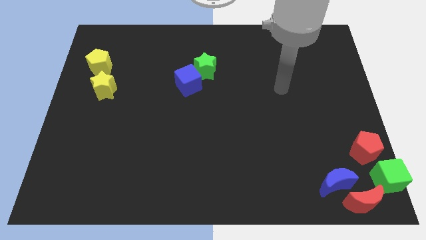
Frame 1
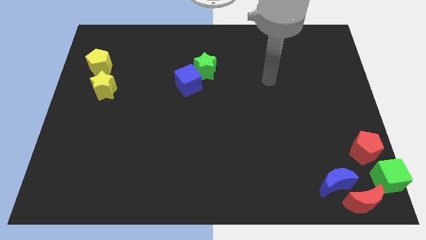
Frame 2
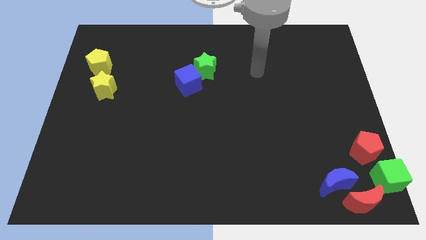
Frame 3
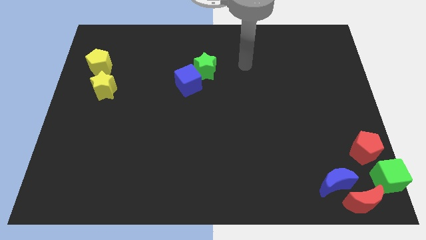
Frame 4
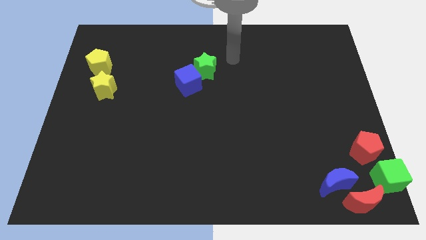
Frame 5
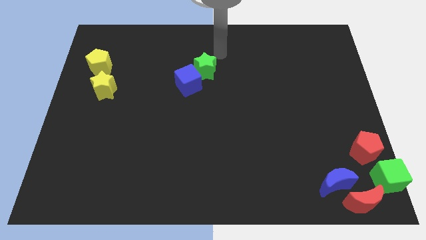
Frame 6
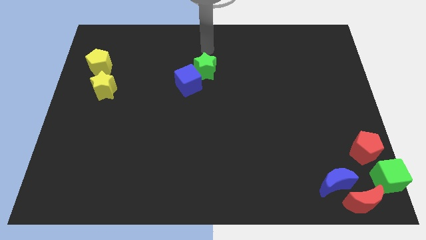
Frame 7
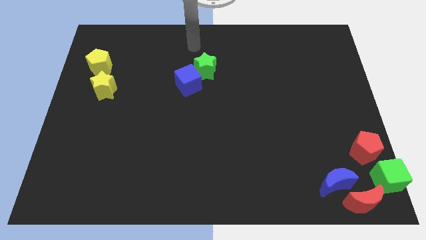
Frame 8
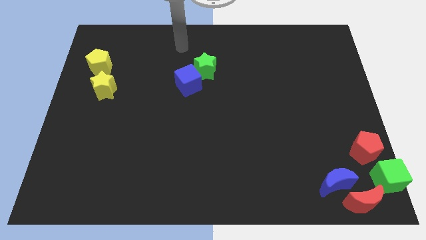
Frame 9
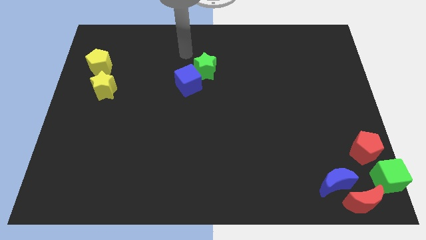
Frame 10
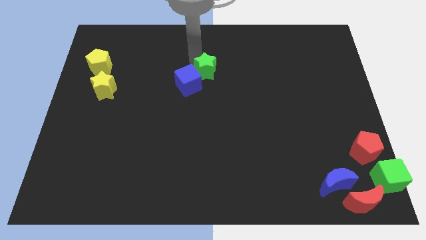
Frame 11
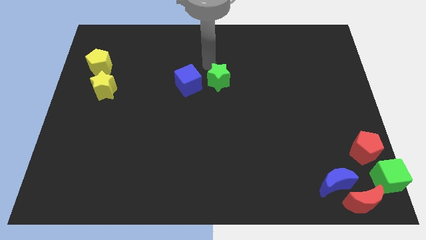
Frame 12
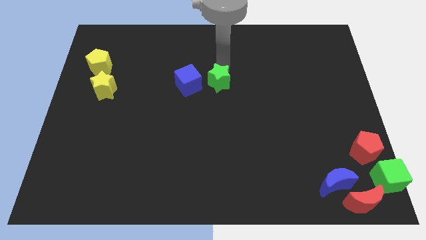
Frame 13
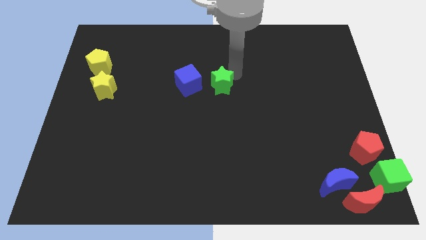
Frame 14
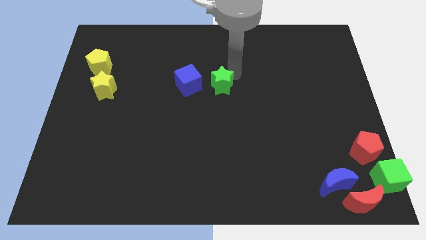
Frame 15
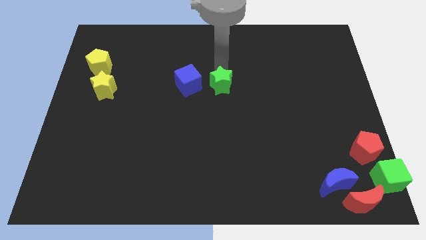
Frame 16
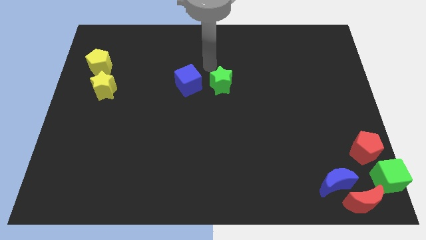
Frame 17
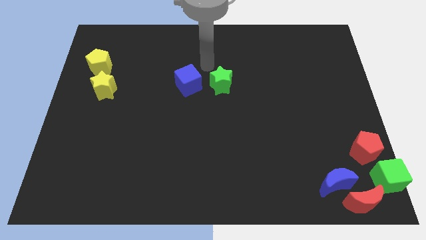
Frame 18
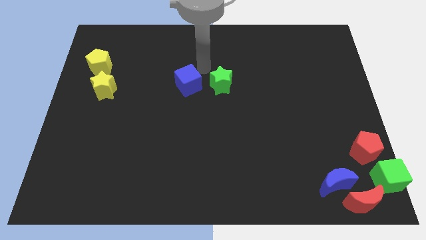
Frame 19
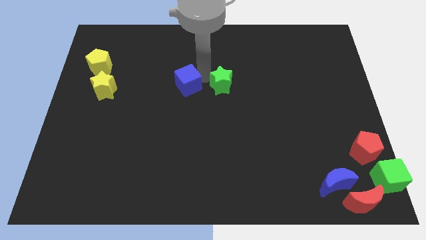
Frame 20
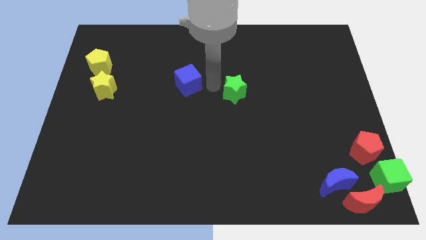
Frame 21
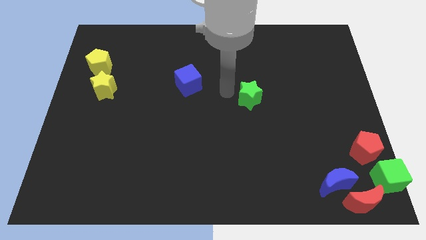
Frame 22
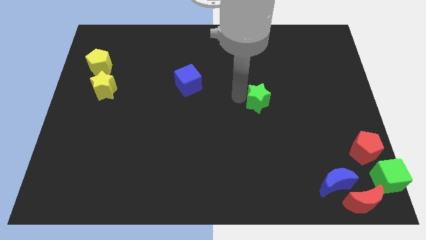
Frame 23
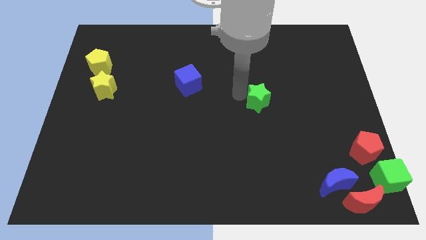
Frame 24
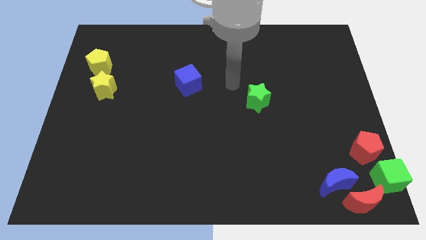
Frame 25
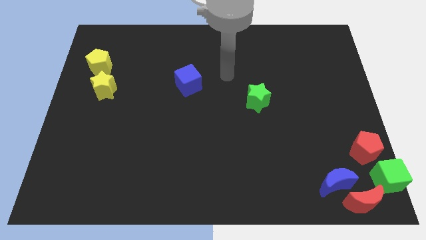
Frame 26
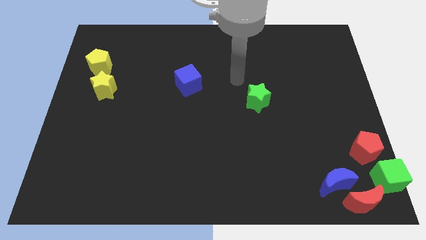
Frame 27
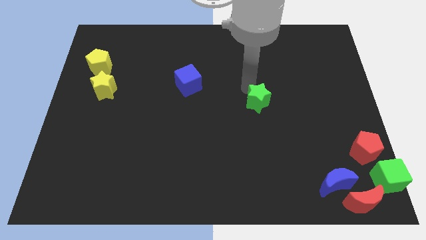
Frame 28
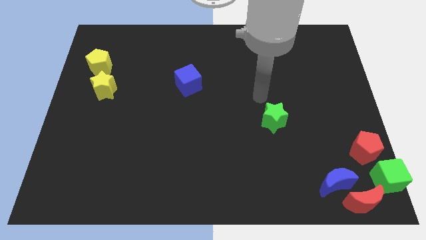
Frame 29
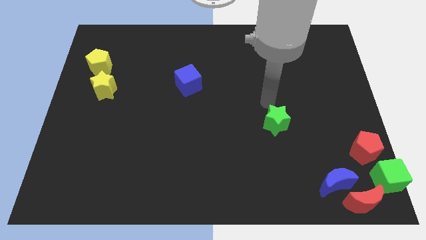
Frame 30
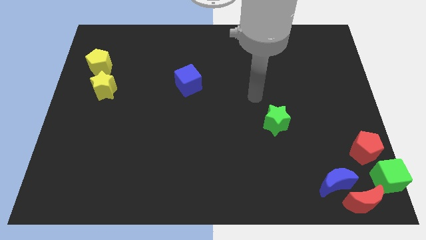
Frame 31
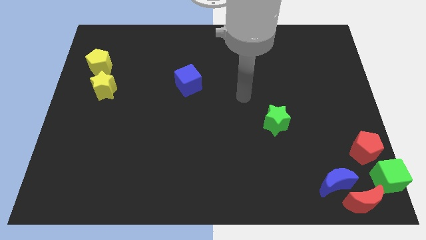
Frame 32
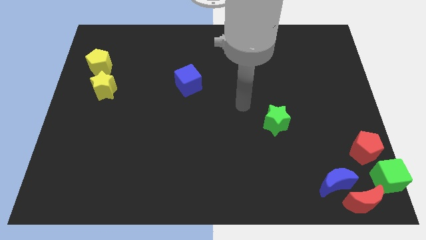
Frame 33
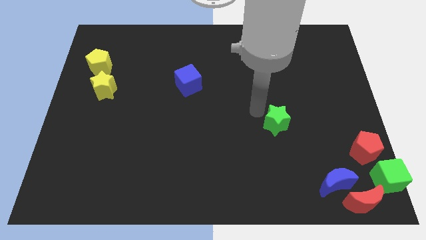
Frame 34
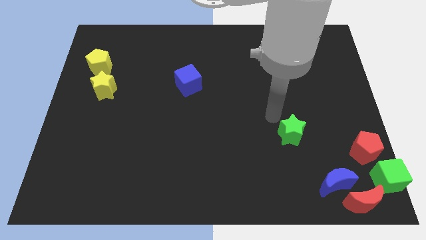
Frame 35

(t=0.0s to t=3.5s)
push the green star towards the group of blocks

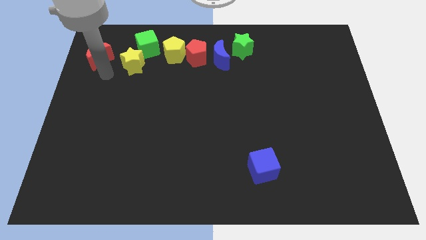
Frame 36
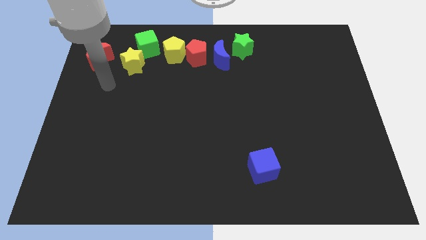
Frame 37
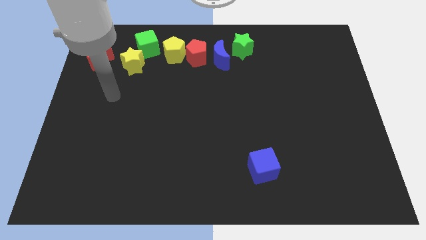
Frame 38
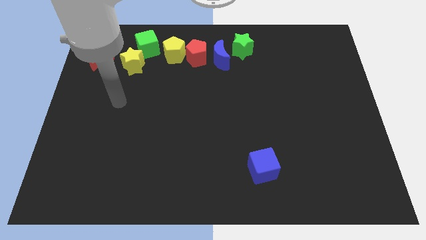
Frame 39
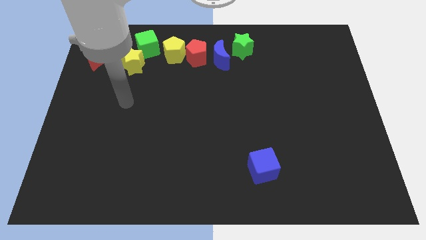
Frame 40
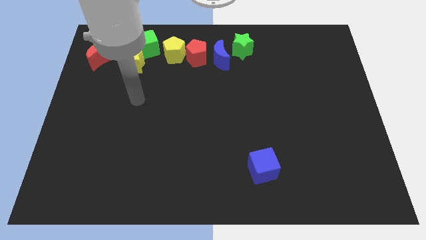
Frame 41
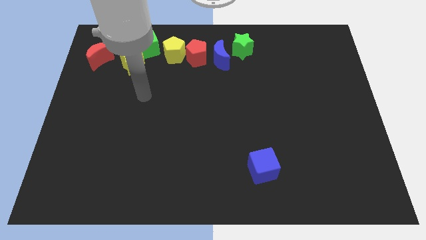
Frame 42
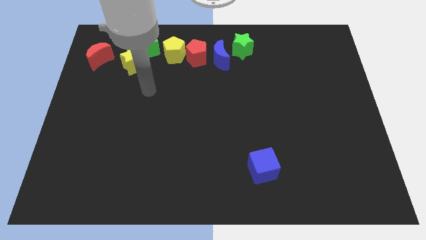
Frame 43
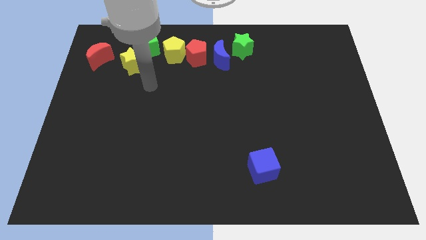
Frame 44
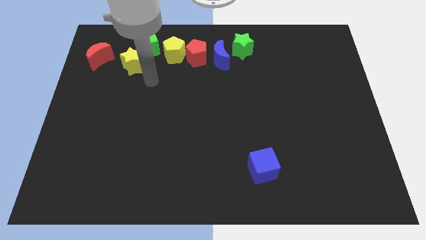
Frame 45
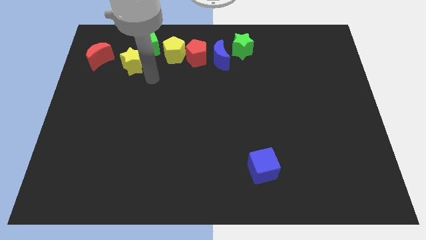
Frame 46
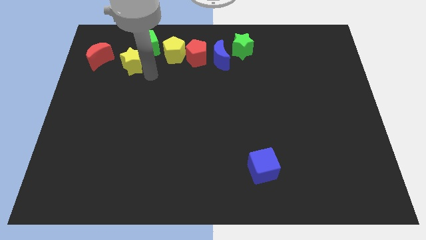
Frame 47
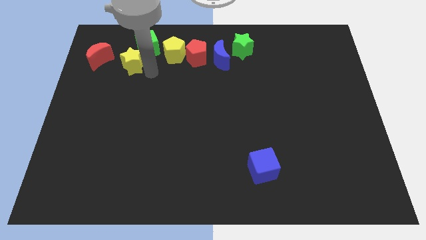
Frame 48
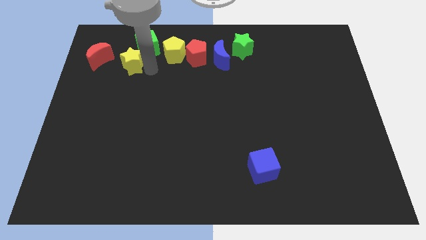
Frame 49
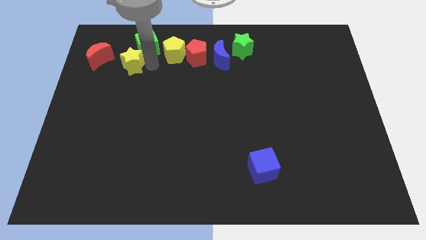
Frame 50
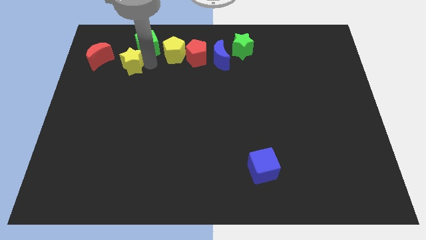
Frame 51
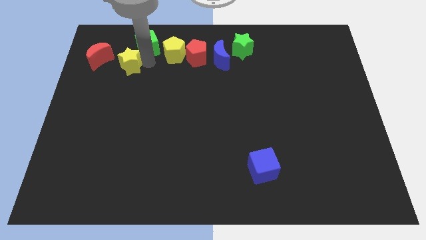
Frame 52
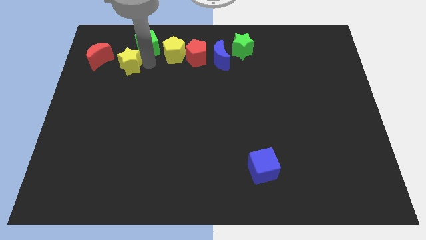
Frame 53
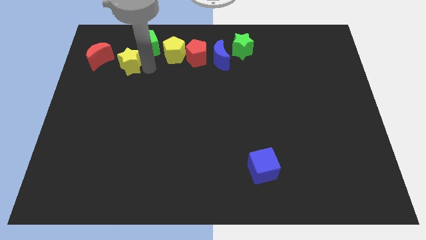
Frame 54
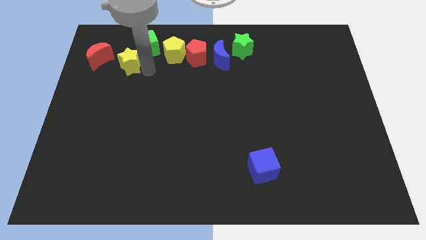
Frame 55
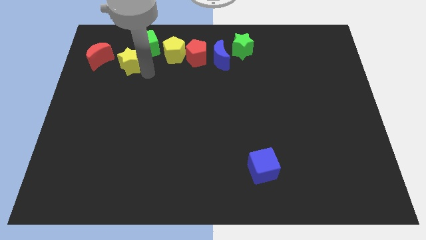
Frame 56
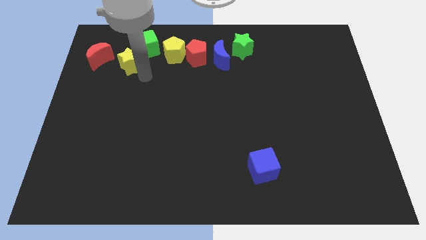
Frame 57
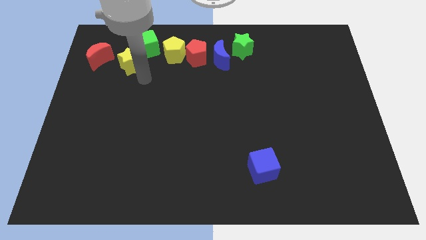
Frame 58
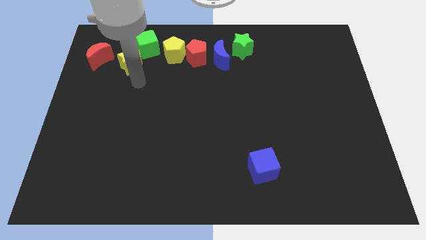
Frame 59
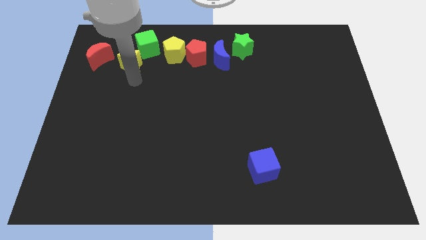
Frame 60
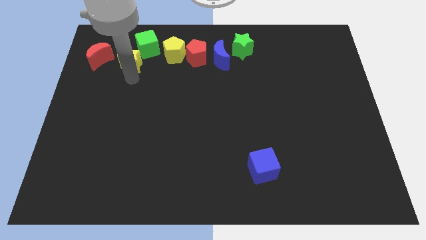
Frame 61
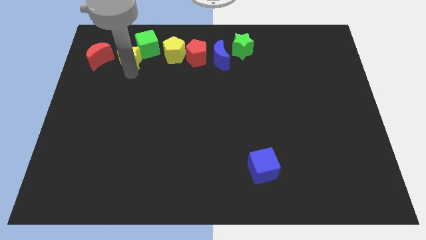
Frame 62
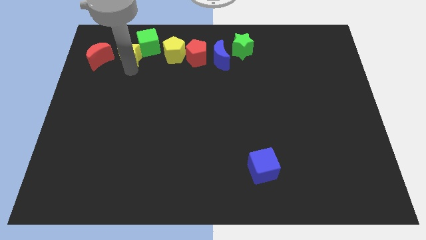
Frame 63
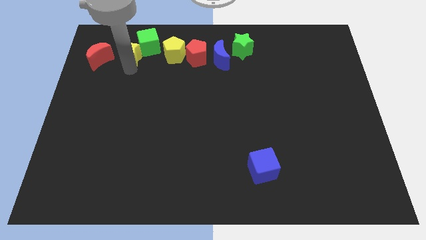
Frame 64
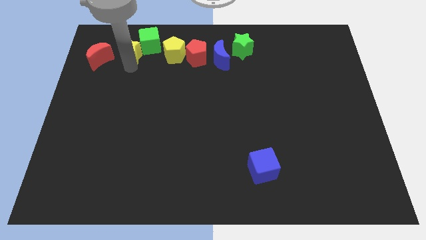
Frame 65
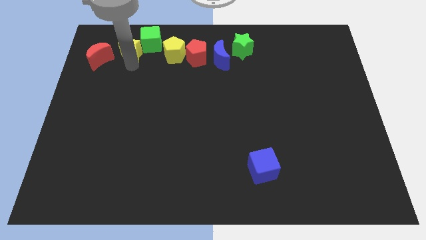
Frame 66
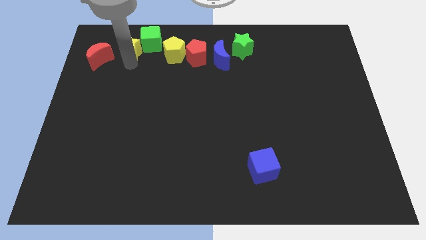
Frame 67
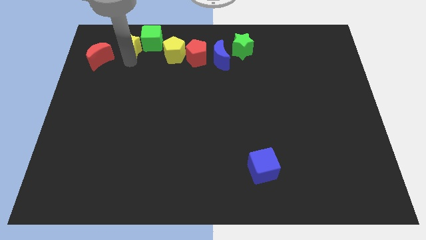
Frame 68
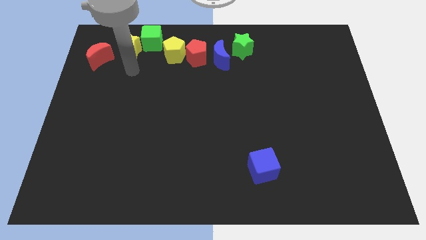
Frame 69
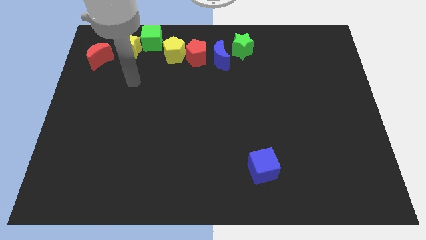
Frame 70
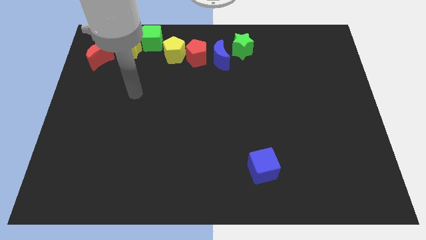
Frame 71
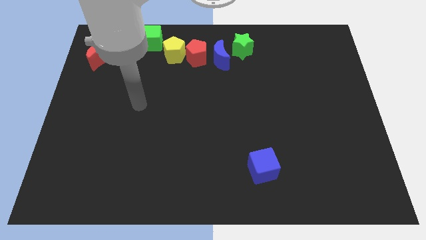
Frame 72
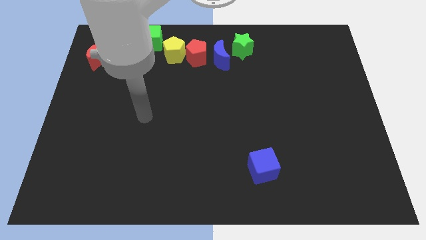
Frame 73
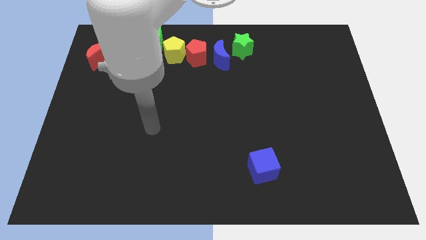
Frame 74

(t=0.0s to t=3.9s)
slightly move the yellow star up

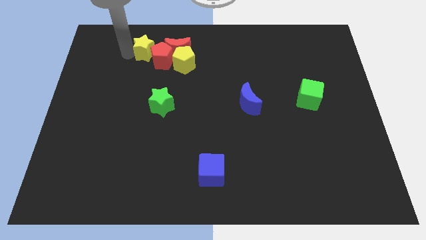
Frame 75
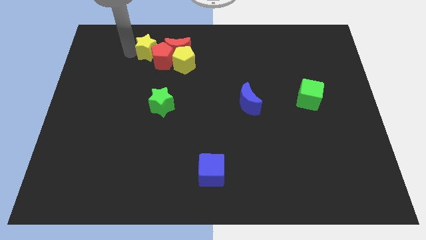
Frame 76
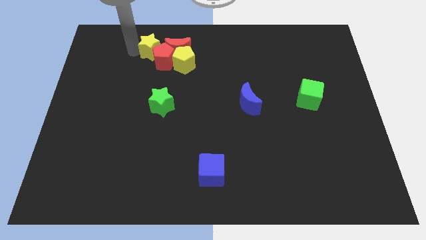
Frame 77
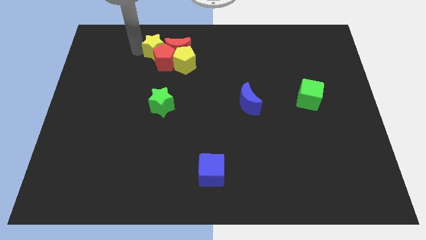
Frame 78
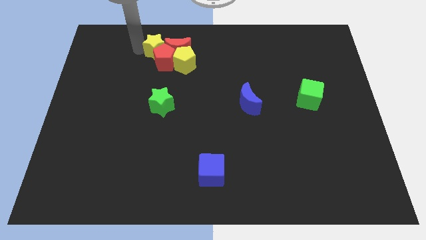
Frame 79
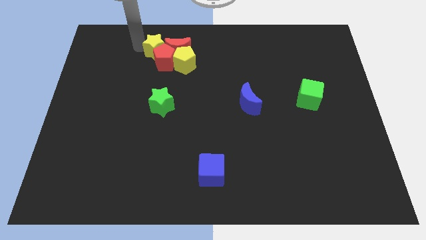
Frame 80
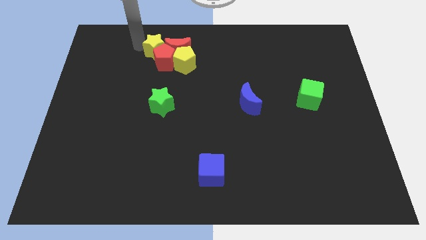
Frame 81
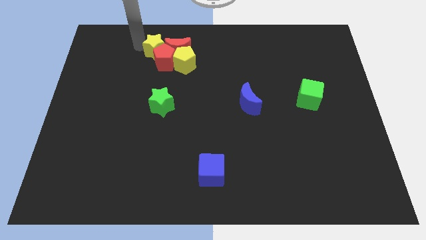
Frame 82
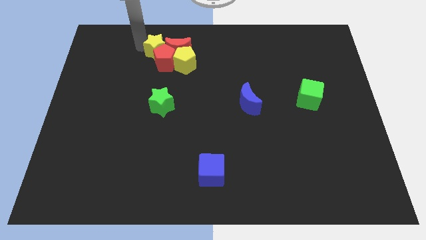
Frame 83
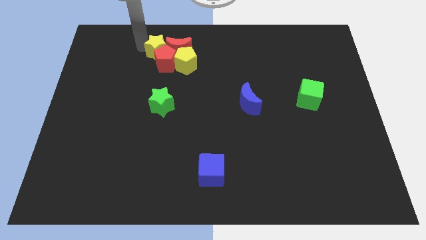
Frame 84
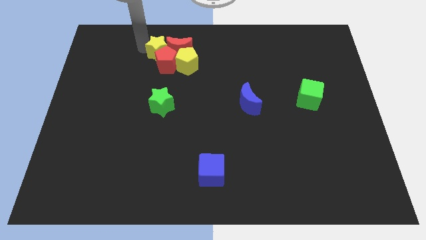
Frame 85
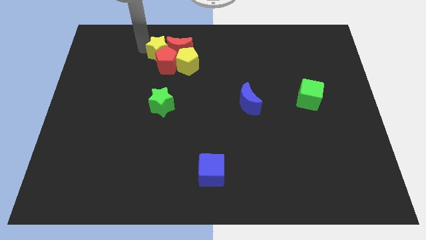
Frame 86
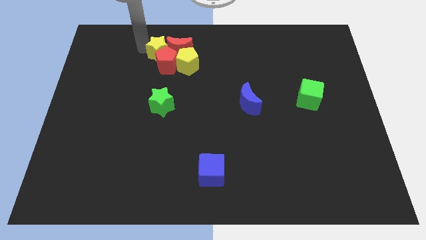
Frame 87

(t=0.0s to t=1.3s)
push yellow star in to red blocks

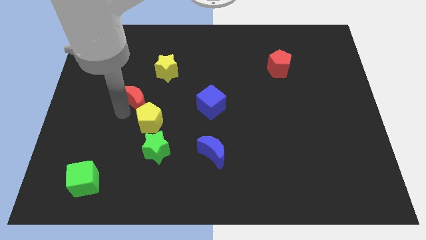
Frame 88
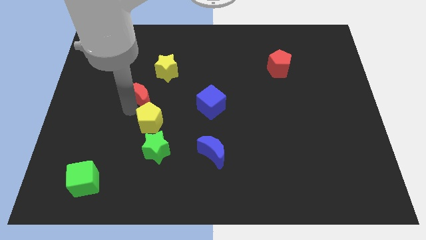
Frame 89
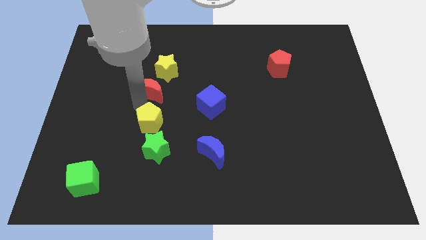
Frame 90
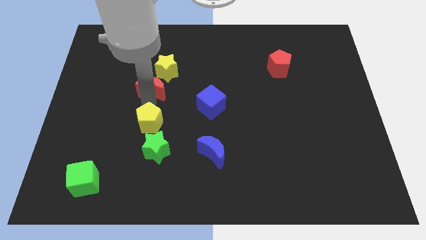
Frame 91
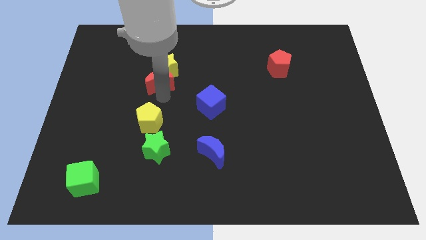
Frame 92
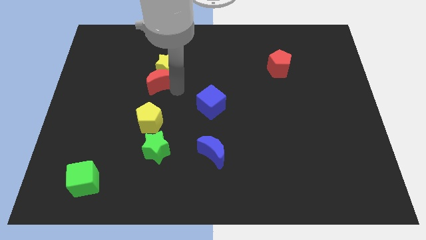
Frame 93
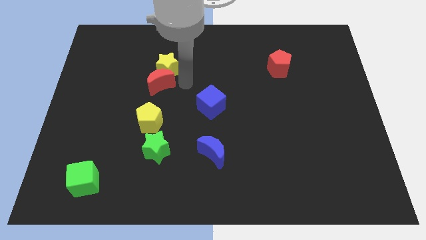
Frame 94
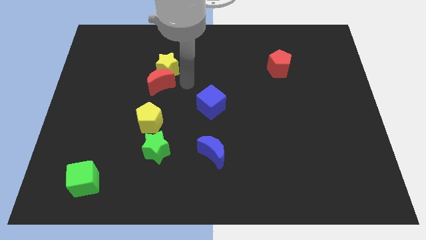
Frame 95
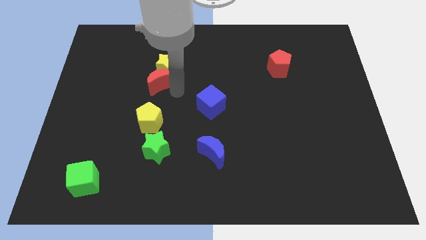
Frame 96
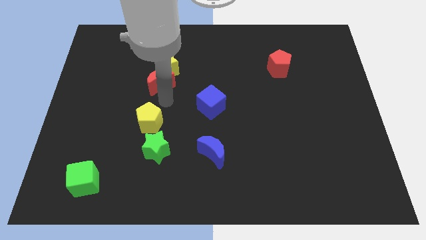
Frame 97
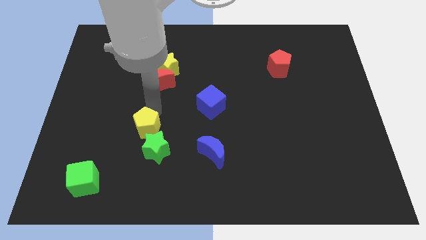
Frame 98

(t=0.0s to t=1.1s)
add red moon into yellow star
